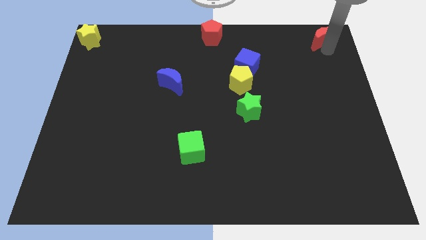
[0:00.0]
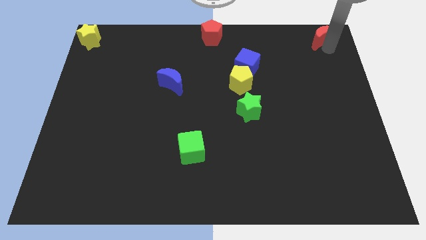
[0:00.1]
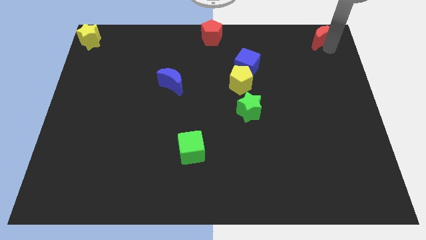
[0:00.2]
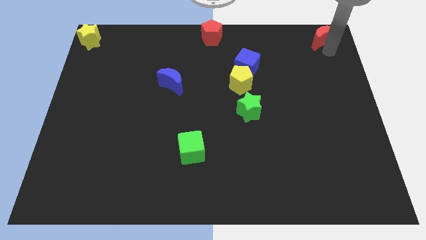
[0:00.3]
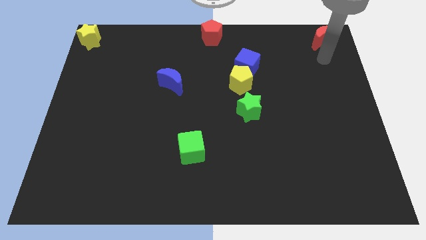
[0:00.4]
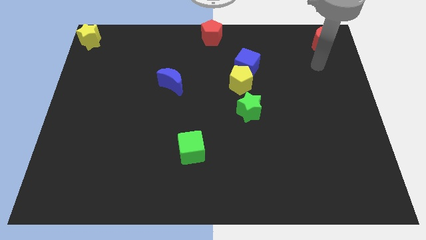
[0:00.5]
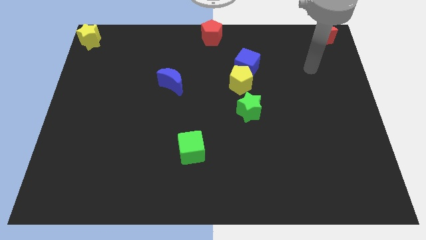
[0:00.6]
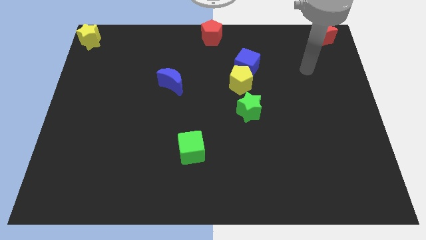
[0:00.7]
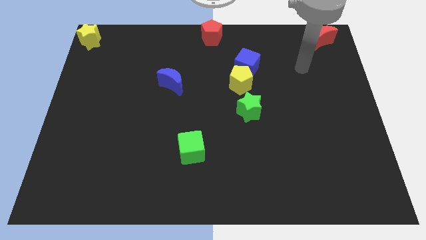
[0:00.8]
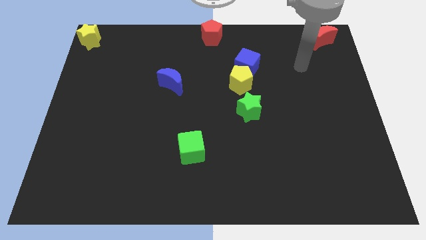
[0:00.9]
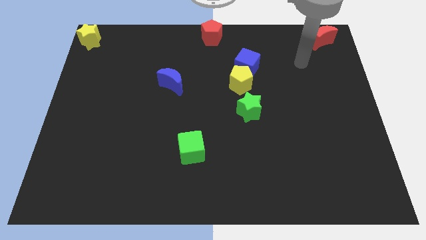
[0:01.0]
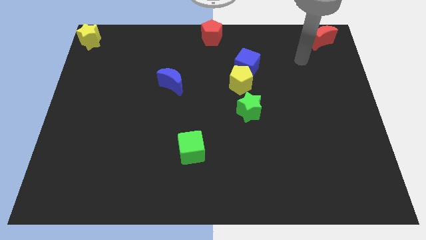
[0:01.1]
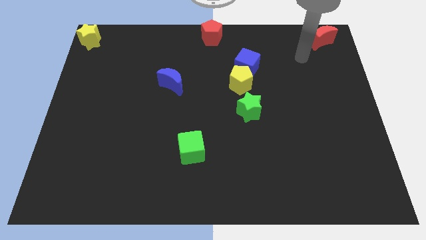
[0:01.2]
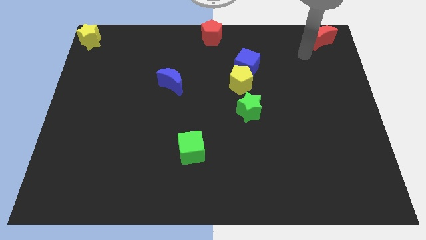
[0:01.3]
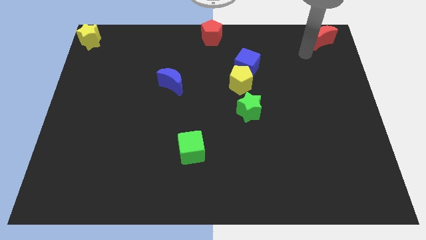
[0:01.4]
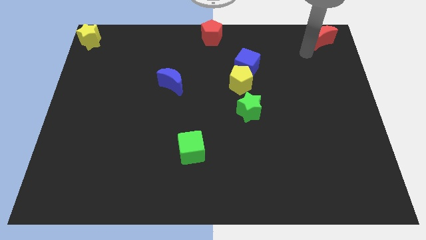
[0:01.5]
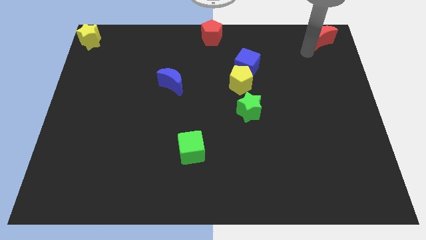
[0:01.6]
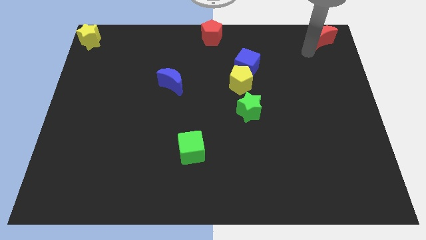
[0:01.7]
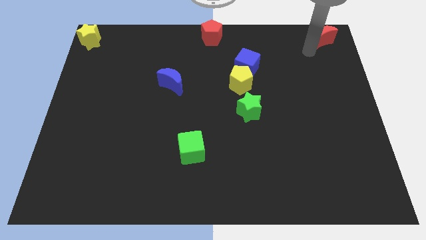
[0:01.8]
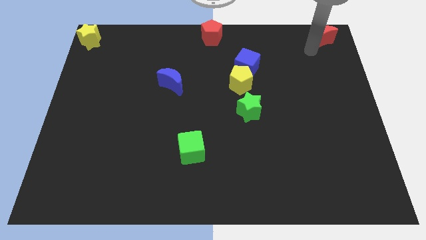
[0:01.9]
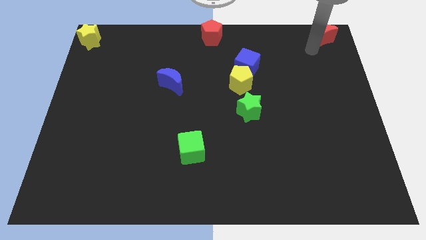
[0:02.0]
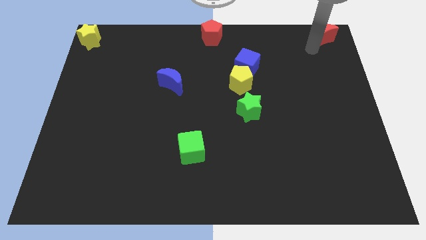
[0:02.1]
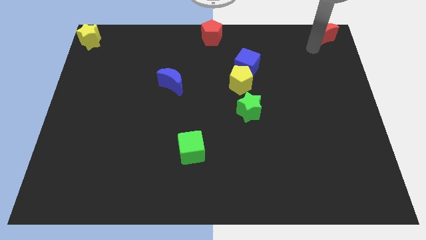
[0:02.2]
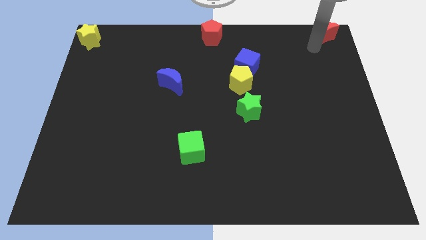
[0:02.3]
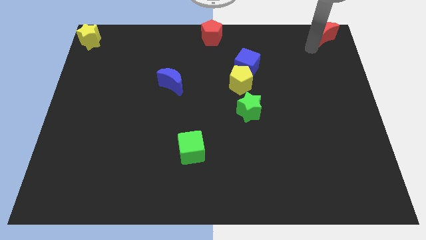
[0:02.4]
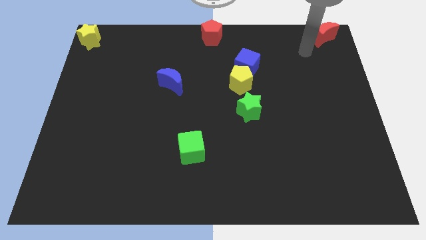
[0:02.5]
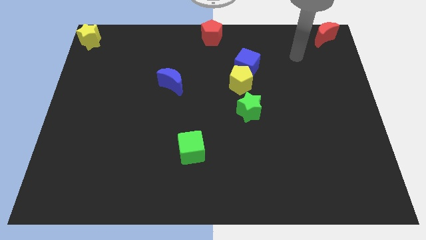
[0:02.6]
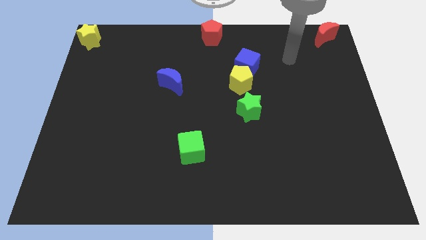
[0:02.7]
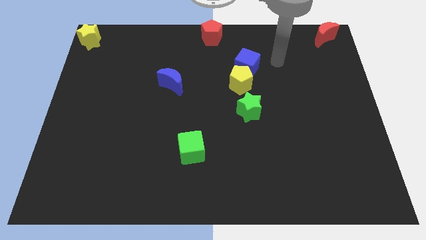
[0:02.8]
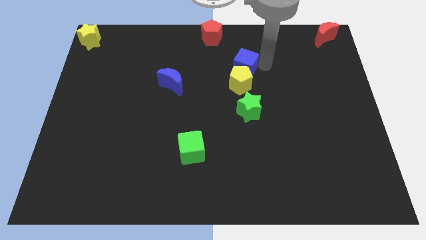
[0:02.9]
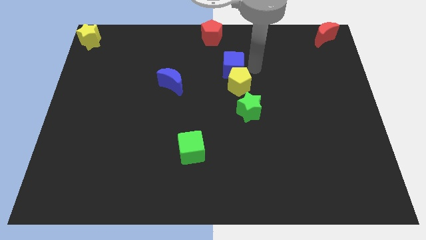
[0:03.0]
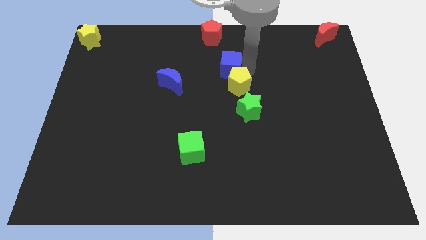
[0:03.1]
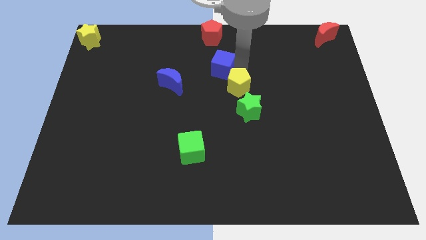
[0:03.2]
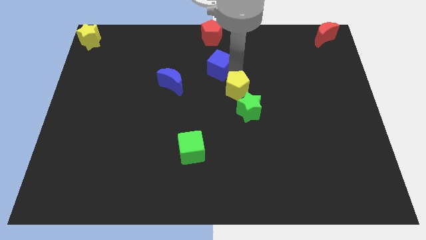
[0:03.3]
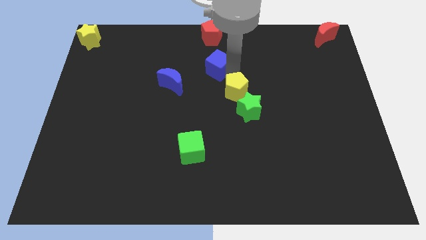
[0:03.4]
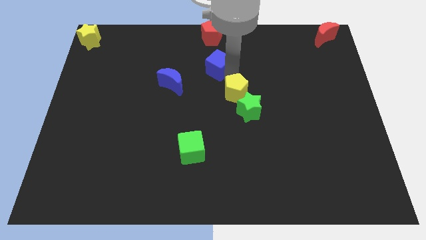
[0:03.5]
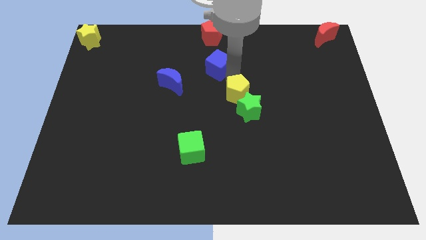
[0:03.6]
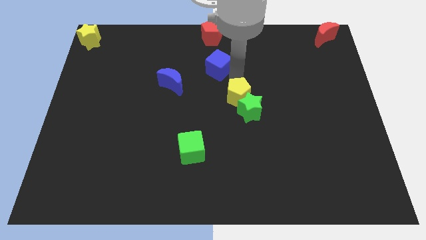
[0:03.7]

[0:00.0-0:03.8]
push blue cube parallel to the pentagon

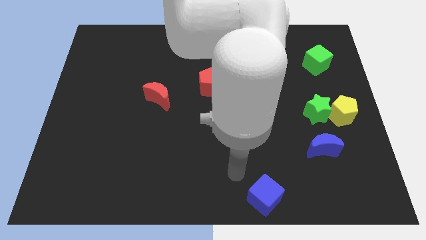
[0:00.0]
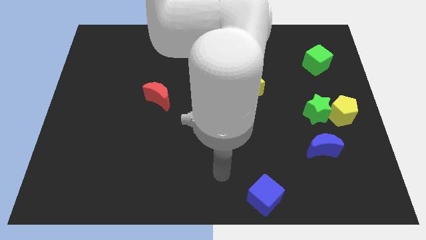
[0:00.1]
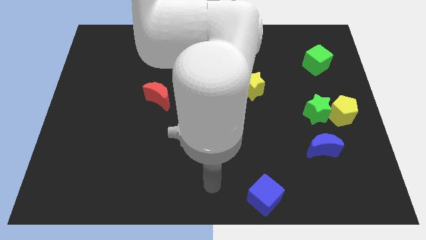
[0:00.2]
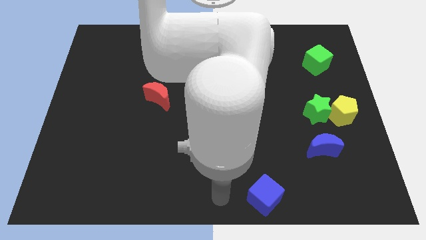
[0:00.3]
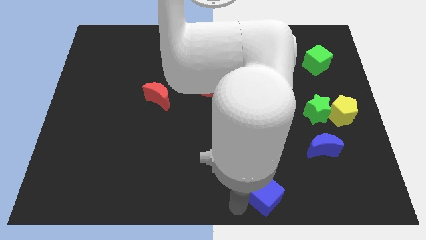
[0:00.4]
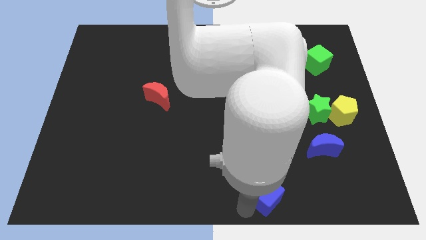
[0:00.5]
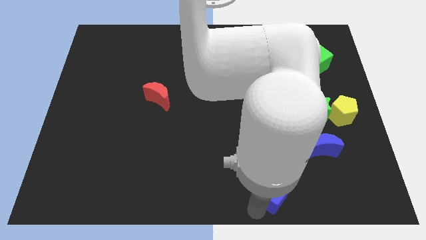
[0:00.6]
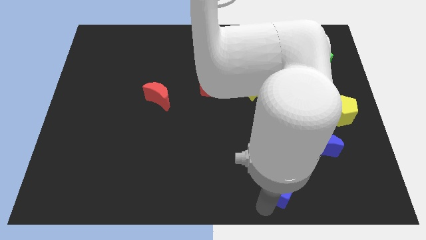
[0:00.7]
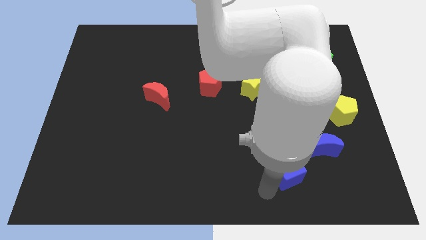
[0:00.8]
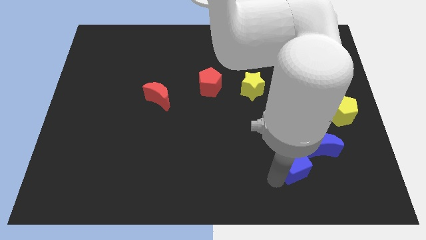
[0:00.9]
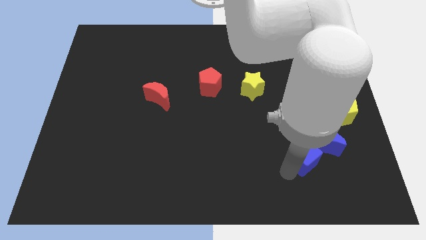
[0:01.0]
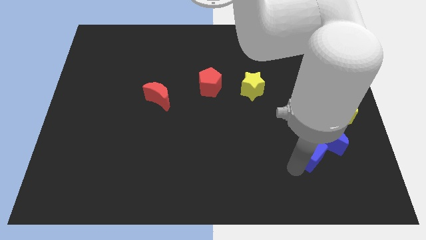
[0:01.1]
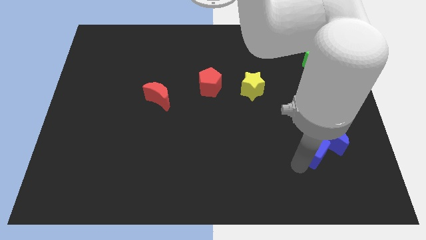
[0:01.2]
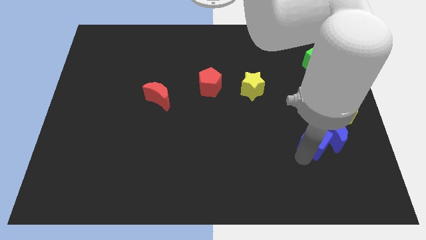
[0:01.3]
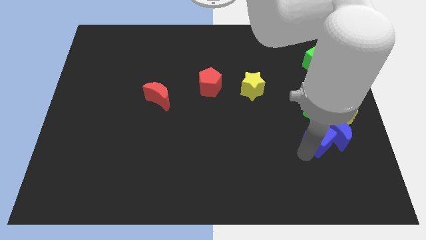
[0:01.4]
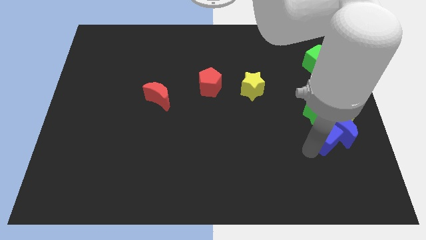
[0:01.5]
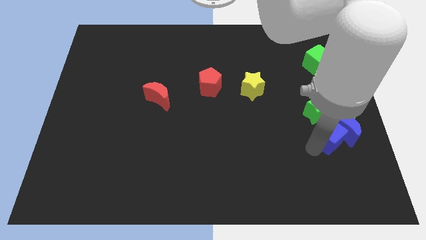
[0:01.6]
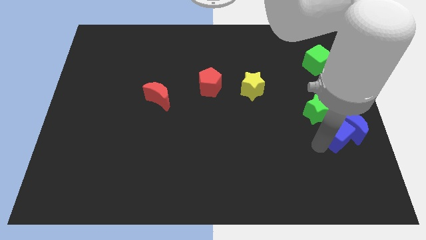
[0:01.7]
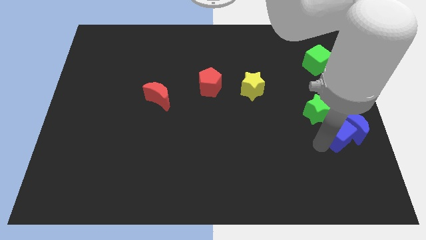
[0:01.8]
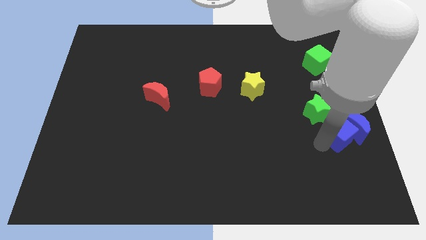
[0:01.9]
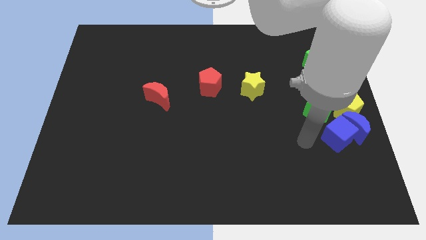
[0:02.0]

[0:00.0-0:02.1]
push the blue moon with the blue cube

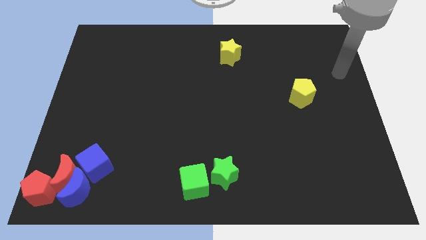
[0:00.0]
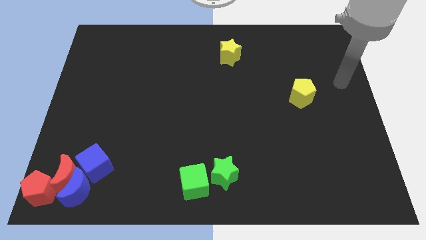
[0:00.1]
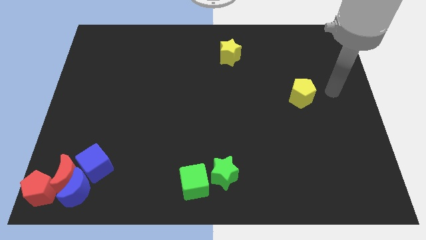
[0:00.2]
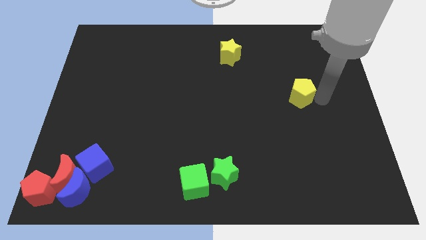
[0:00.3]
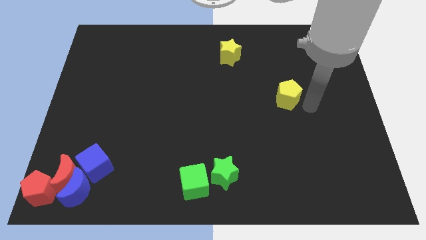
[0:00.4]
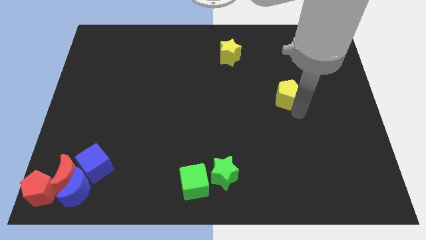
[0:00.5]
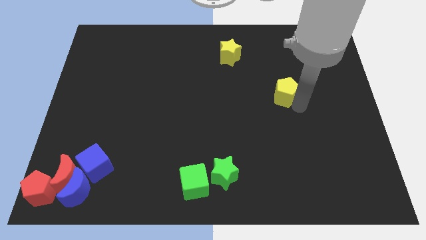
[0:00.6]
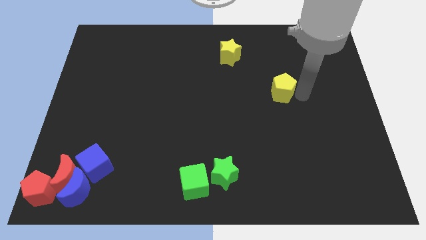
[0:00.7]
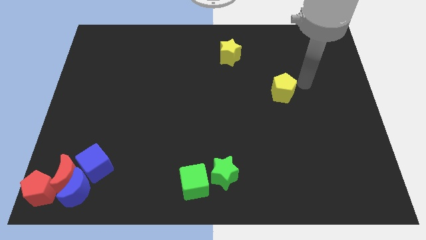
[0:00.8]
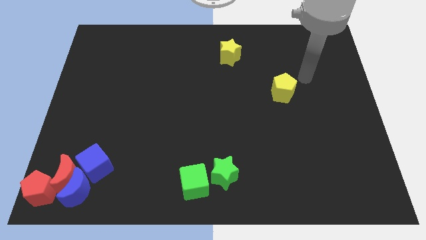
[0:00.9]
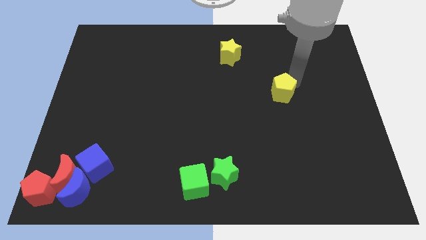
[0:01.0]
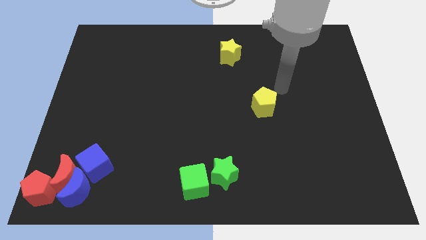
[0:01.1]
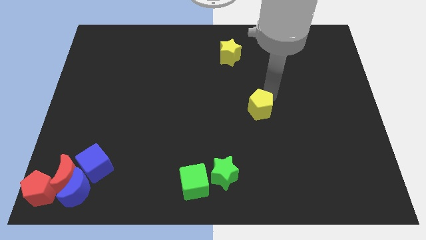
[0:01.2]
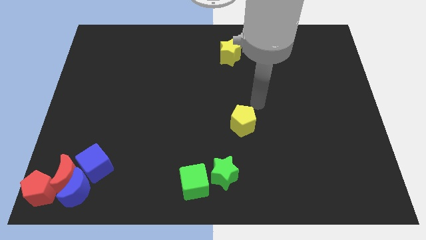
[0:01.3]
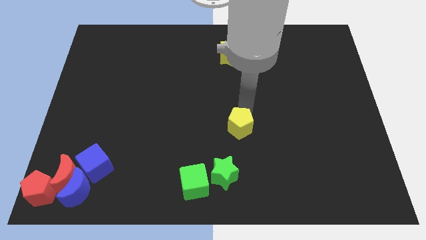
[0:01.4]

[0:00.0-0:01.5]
move yellow pentagon towards the green star

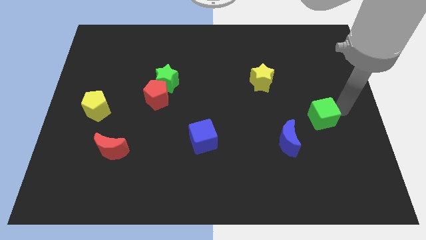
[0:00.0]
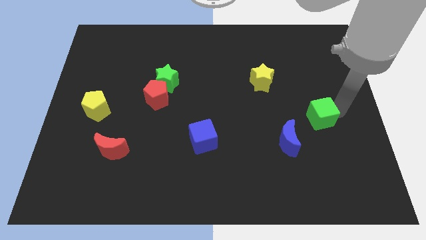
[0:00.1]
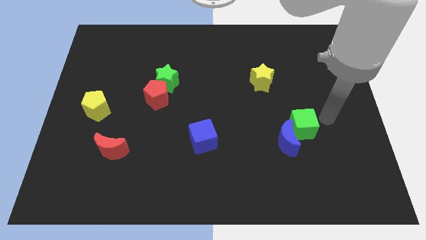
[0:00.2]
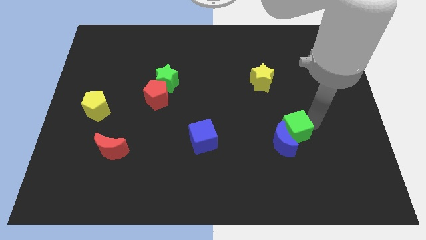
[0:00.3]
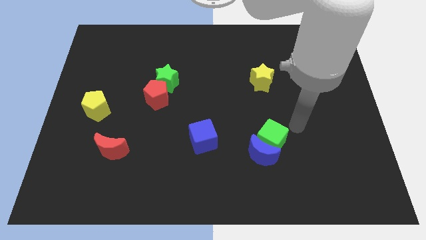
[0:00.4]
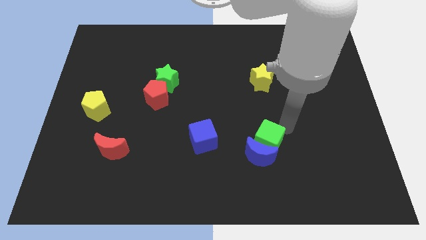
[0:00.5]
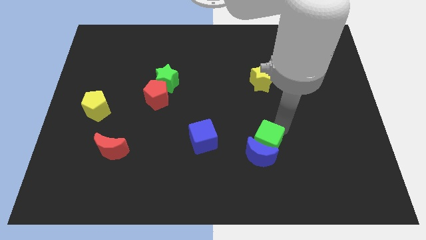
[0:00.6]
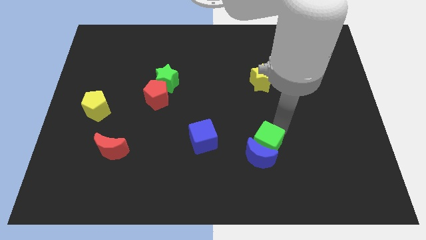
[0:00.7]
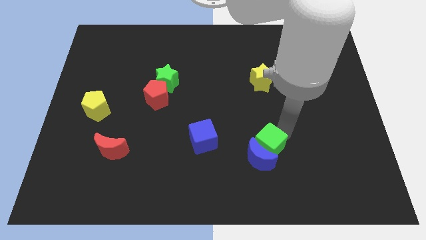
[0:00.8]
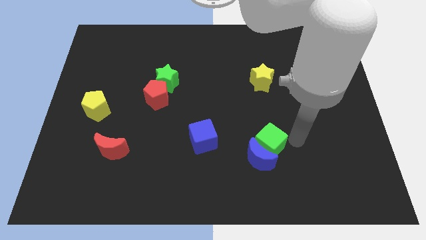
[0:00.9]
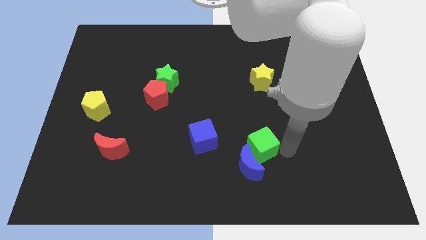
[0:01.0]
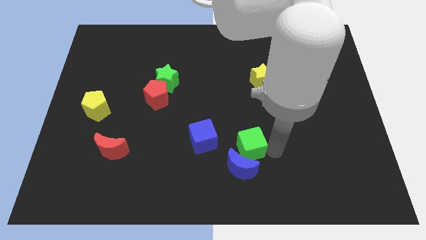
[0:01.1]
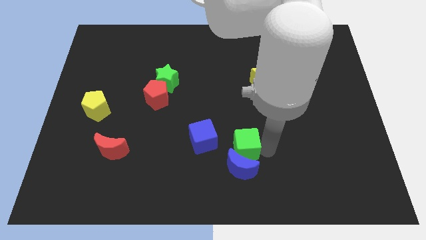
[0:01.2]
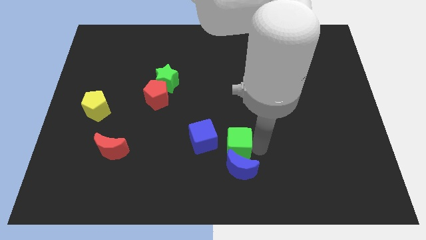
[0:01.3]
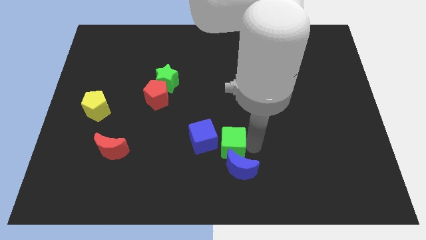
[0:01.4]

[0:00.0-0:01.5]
push the green cube into the blue crescent on the board

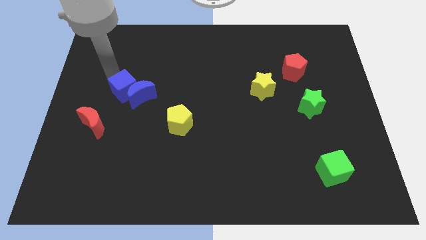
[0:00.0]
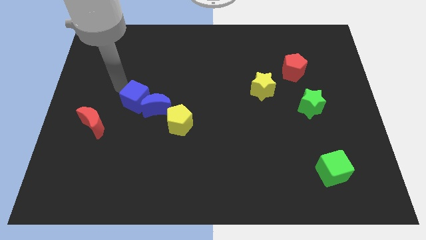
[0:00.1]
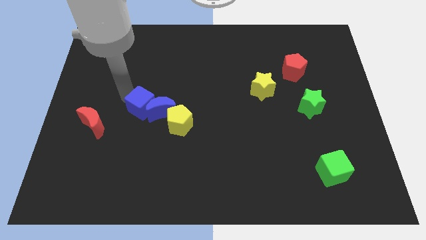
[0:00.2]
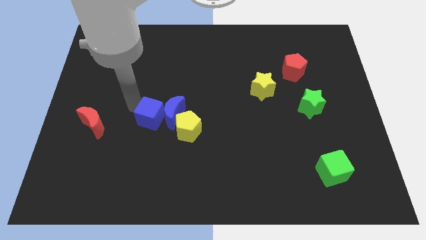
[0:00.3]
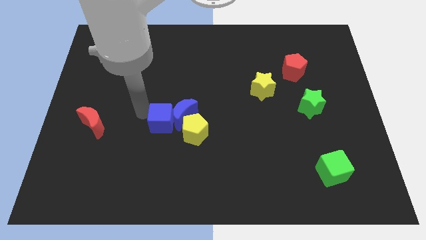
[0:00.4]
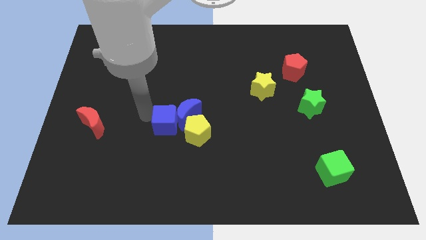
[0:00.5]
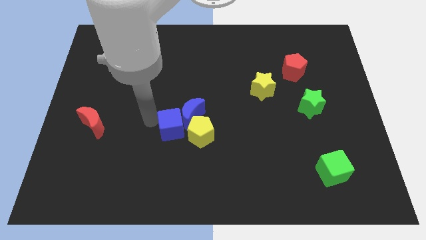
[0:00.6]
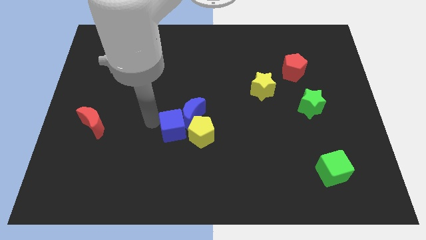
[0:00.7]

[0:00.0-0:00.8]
move the blue blocks into the yellow pentagon
